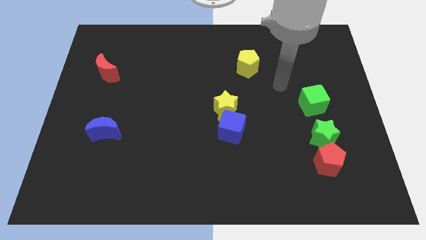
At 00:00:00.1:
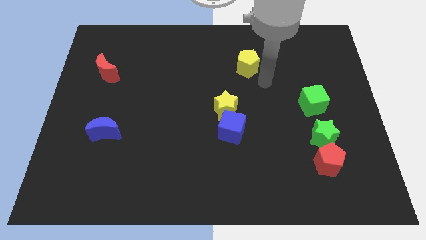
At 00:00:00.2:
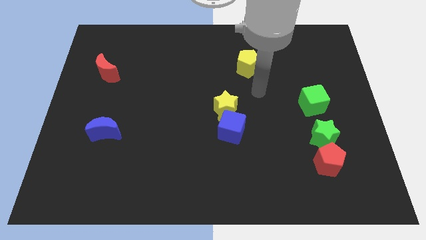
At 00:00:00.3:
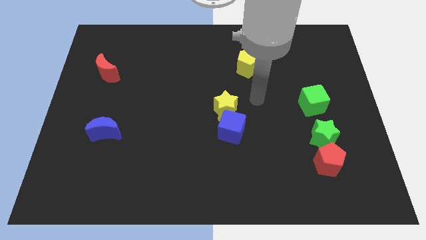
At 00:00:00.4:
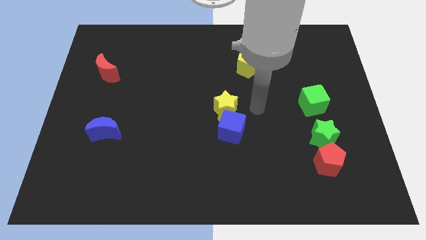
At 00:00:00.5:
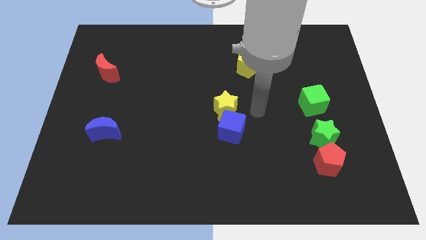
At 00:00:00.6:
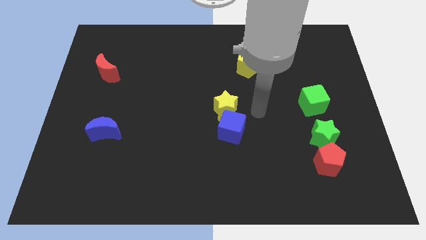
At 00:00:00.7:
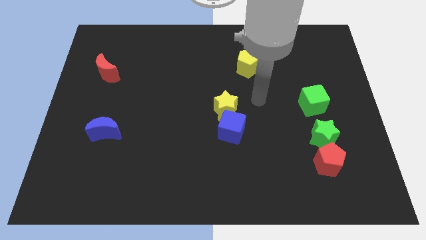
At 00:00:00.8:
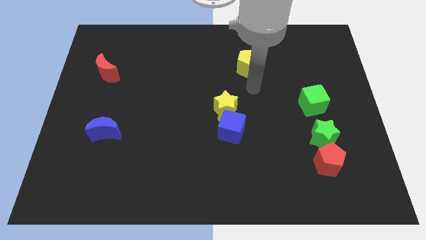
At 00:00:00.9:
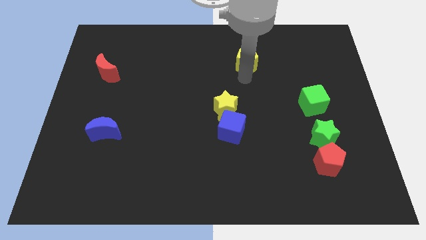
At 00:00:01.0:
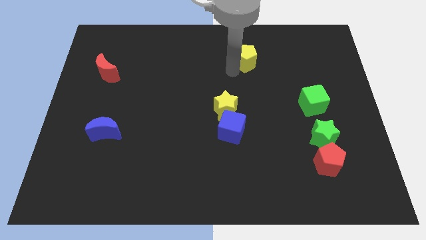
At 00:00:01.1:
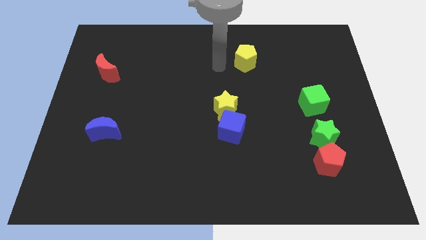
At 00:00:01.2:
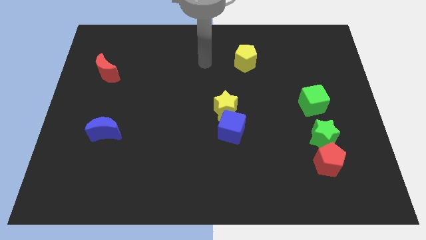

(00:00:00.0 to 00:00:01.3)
tap the yellow pentagon

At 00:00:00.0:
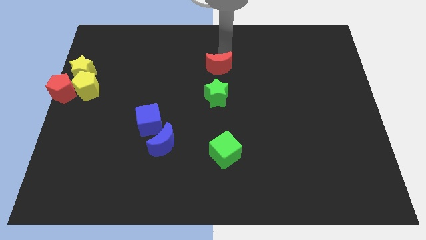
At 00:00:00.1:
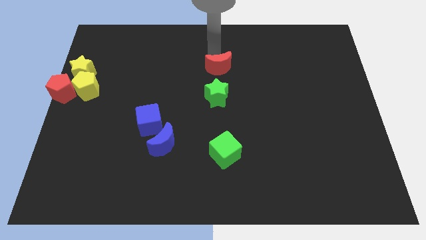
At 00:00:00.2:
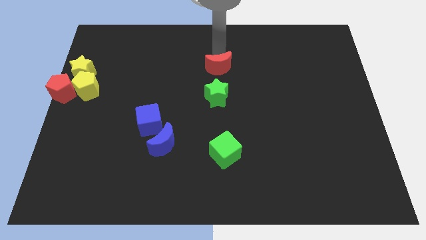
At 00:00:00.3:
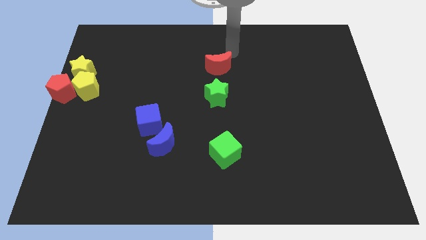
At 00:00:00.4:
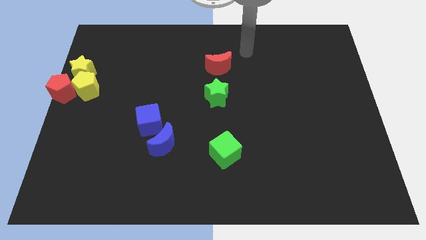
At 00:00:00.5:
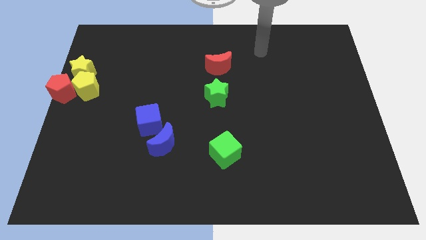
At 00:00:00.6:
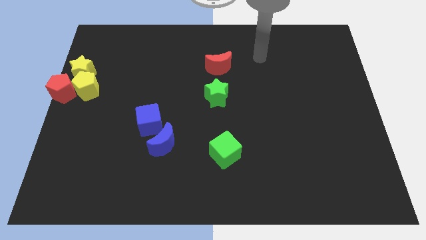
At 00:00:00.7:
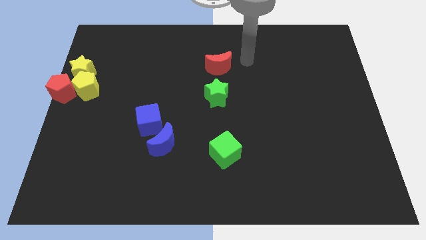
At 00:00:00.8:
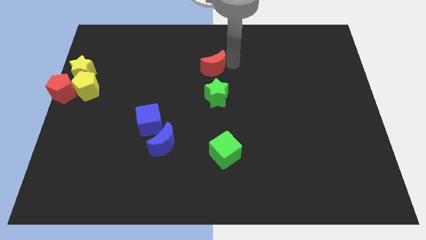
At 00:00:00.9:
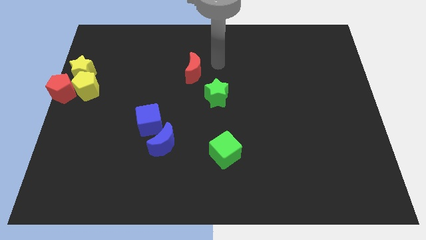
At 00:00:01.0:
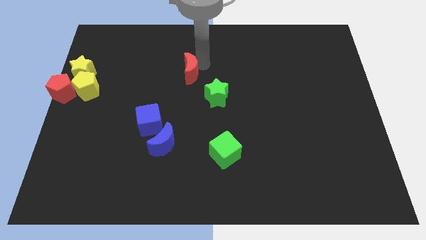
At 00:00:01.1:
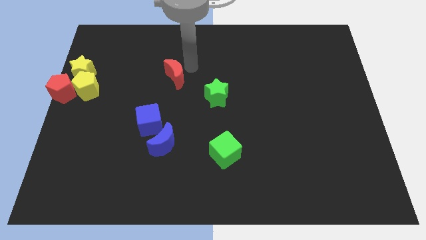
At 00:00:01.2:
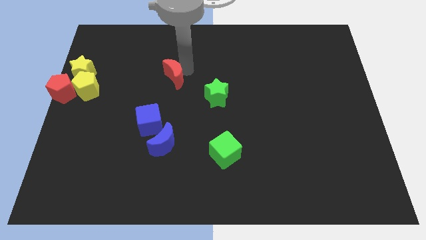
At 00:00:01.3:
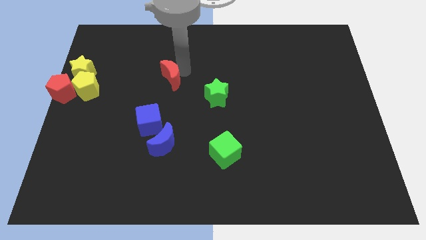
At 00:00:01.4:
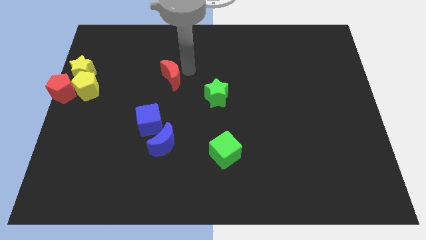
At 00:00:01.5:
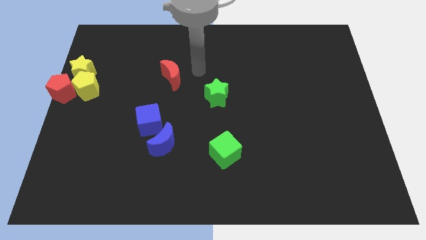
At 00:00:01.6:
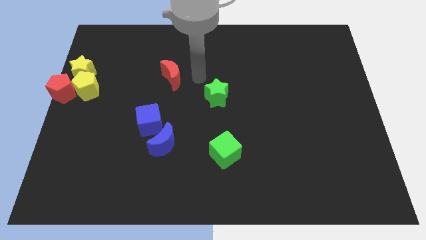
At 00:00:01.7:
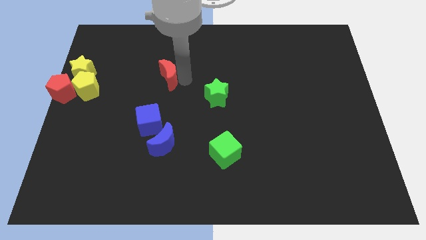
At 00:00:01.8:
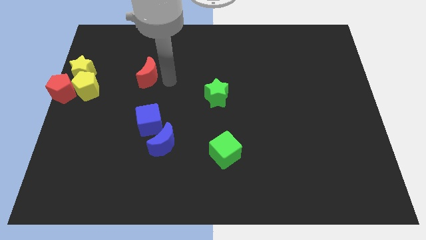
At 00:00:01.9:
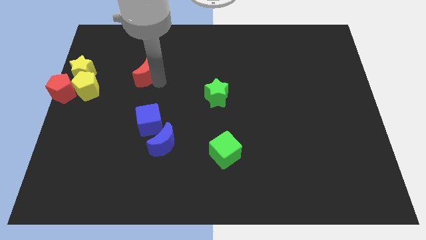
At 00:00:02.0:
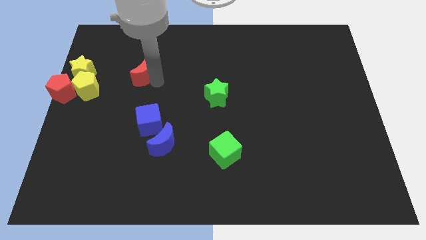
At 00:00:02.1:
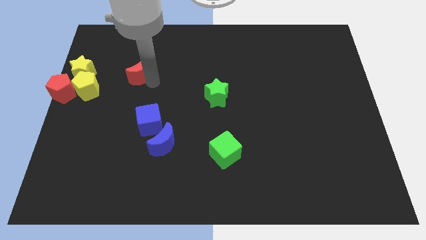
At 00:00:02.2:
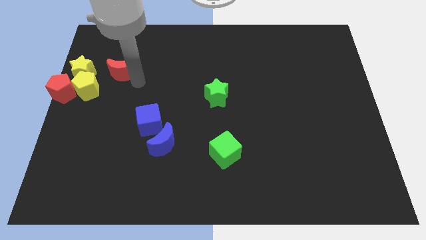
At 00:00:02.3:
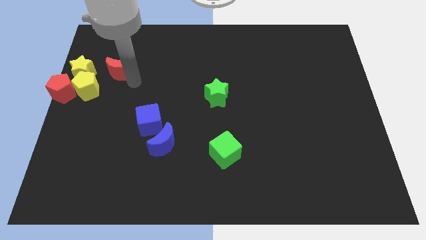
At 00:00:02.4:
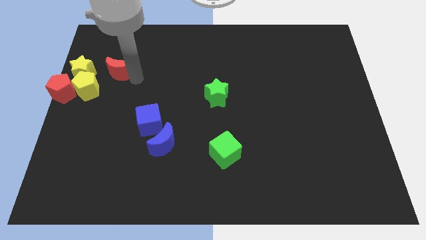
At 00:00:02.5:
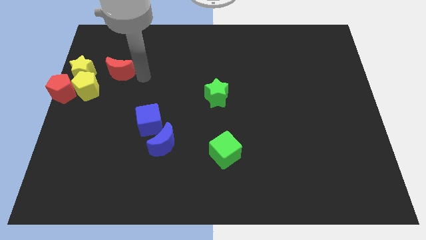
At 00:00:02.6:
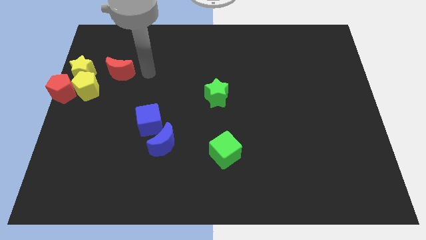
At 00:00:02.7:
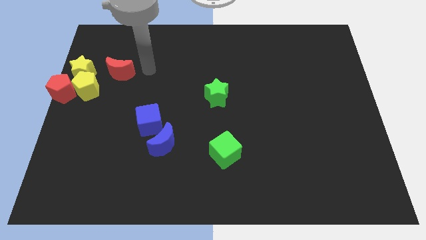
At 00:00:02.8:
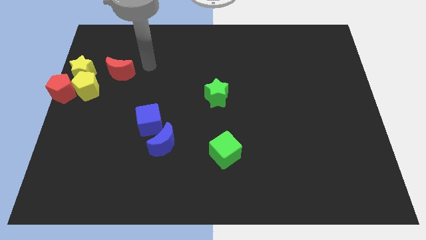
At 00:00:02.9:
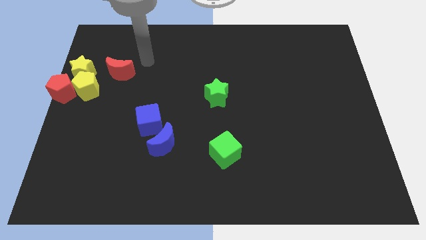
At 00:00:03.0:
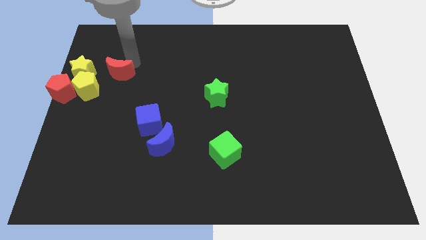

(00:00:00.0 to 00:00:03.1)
slide red moon to the right of yellow star

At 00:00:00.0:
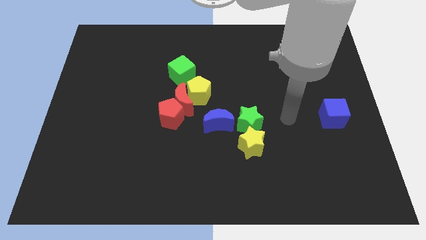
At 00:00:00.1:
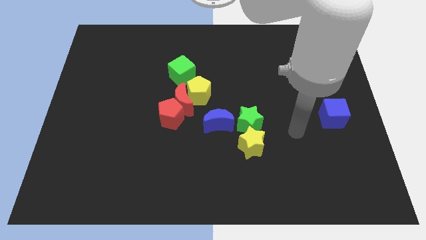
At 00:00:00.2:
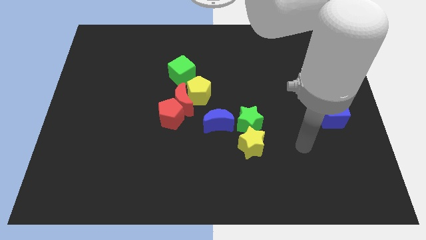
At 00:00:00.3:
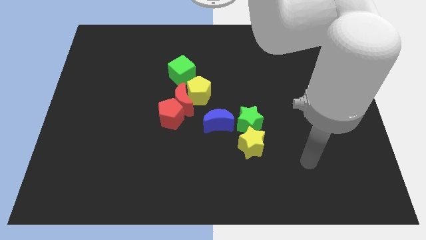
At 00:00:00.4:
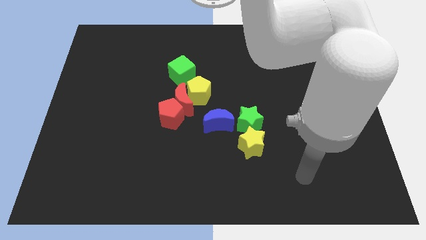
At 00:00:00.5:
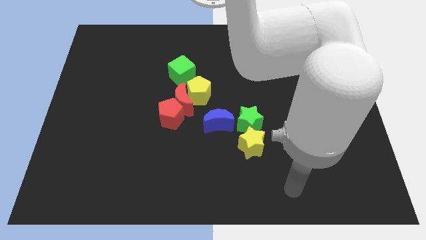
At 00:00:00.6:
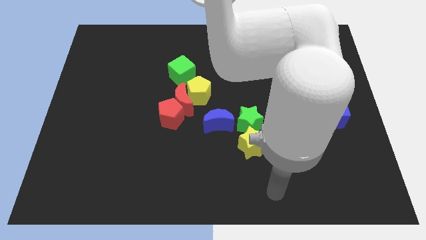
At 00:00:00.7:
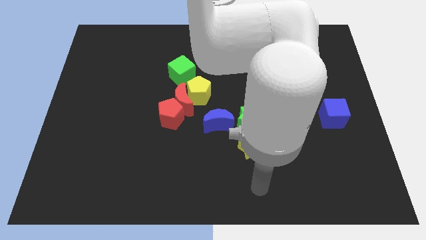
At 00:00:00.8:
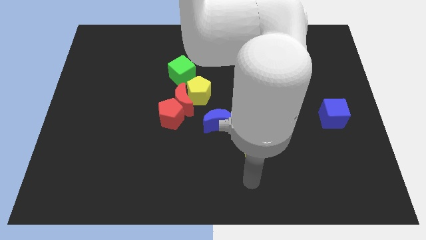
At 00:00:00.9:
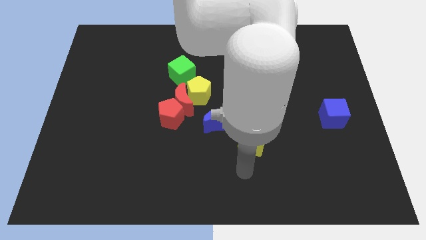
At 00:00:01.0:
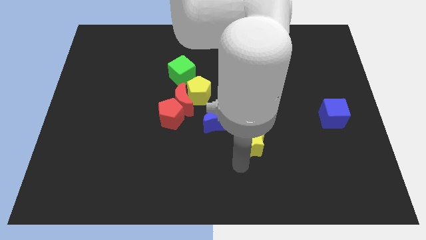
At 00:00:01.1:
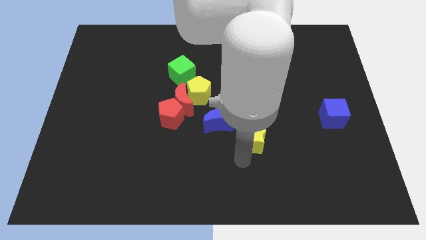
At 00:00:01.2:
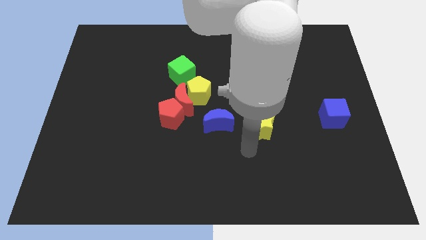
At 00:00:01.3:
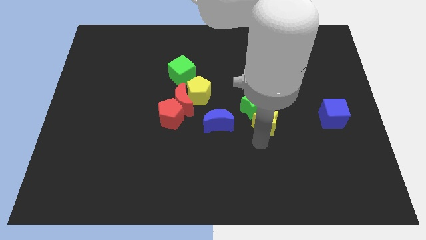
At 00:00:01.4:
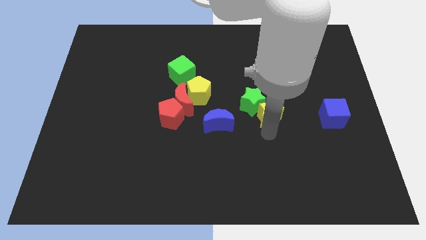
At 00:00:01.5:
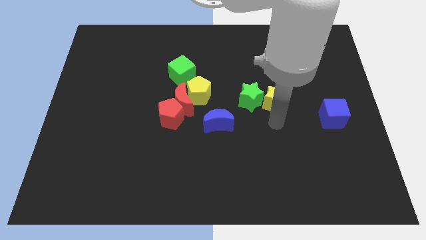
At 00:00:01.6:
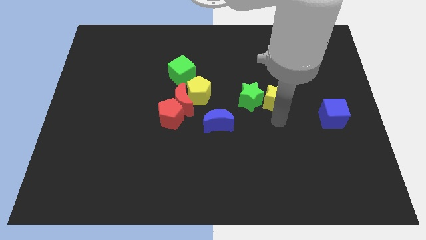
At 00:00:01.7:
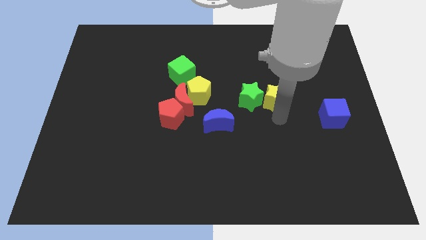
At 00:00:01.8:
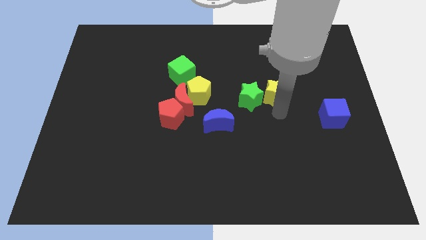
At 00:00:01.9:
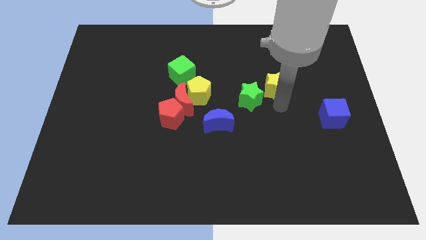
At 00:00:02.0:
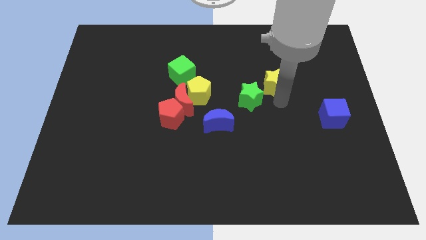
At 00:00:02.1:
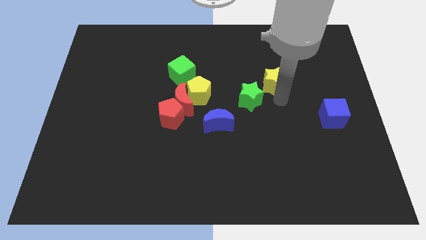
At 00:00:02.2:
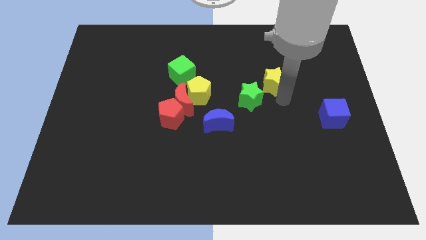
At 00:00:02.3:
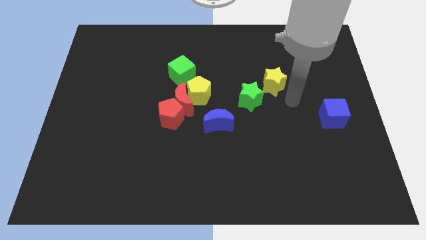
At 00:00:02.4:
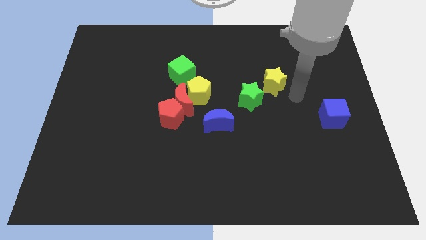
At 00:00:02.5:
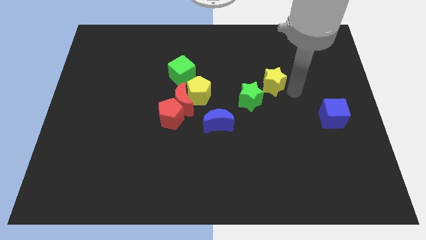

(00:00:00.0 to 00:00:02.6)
push the yellow star vertical to the green star

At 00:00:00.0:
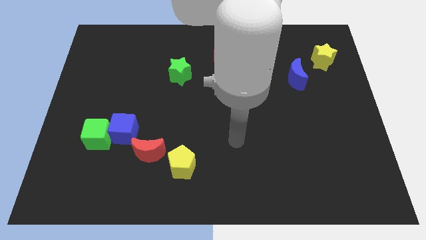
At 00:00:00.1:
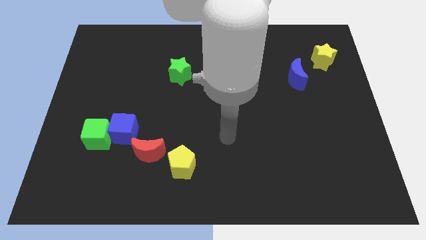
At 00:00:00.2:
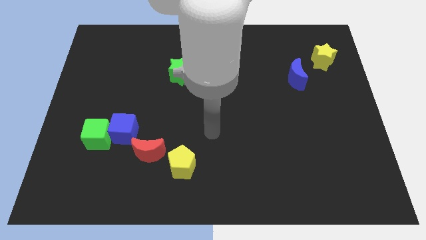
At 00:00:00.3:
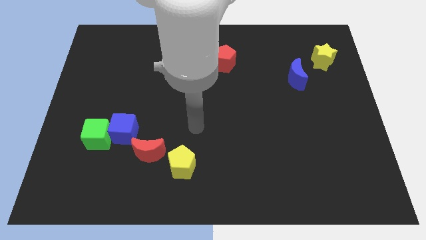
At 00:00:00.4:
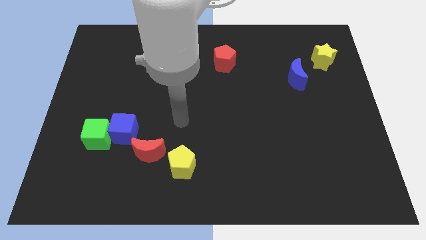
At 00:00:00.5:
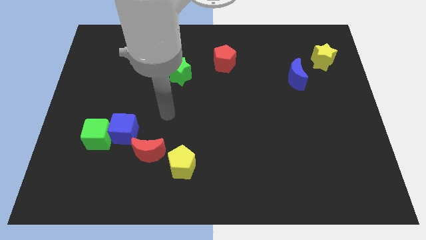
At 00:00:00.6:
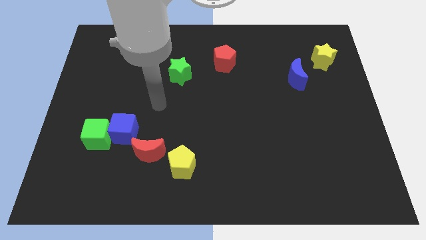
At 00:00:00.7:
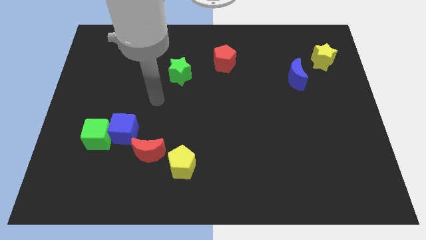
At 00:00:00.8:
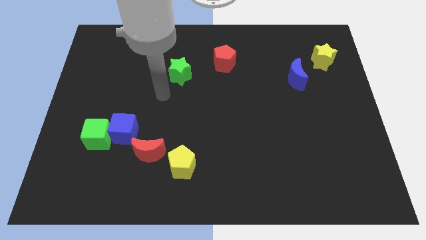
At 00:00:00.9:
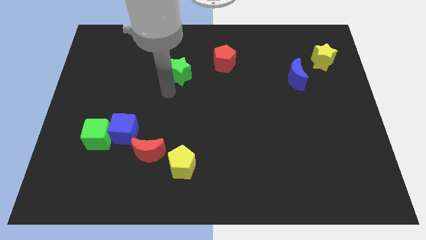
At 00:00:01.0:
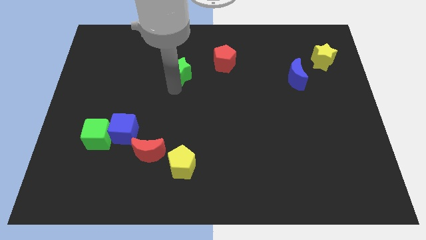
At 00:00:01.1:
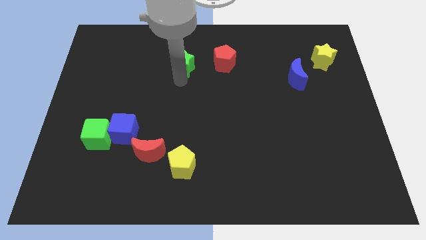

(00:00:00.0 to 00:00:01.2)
point your arm at the bottom of green star

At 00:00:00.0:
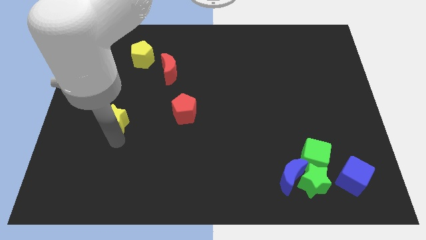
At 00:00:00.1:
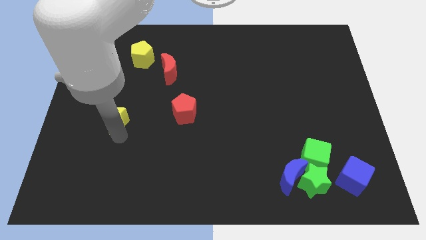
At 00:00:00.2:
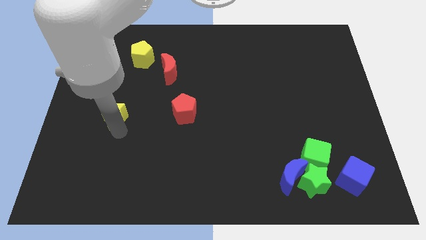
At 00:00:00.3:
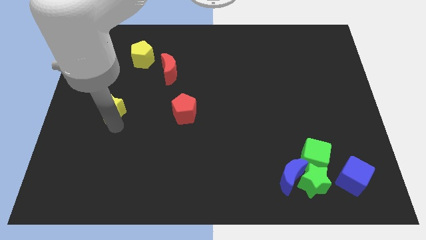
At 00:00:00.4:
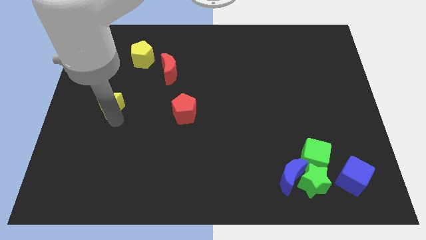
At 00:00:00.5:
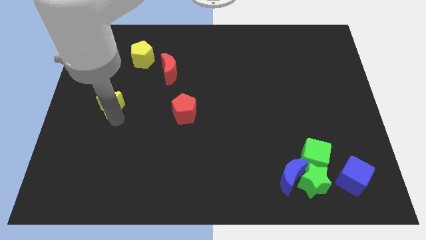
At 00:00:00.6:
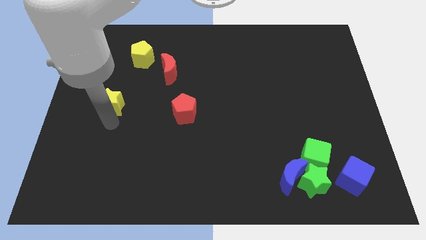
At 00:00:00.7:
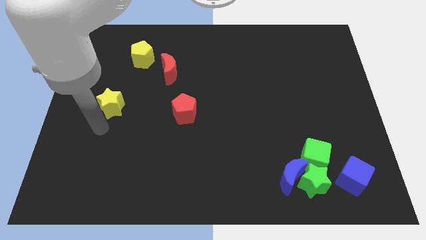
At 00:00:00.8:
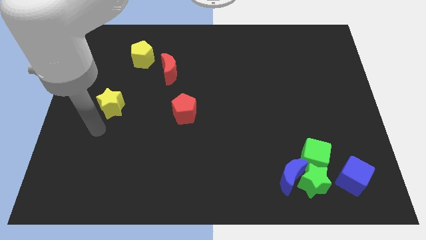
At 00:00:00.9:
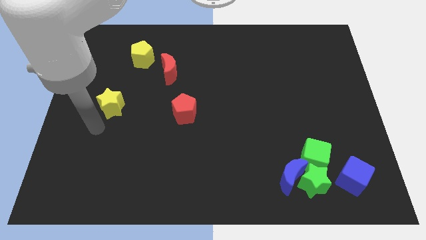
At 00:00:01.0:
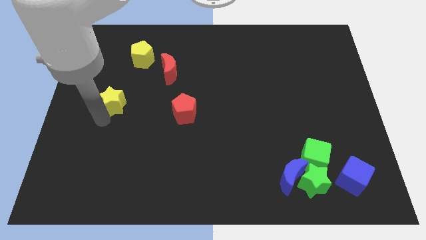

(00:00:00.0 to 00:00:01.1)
move the yellow star towards the yellow pentagon
